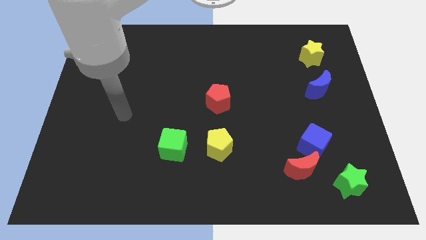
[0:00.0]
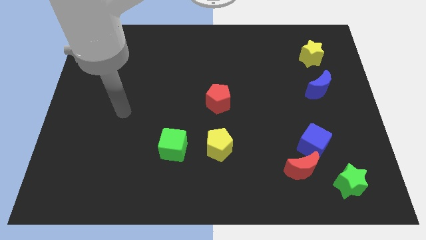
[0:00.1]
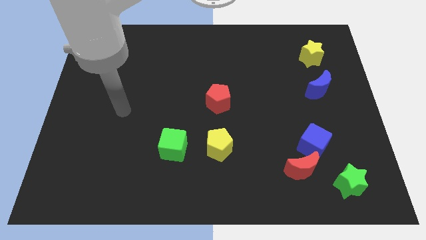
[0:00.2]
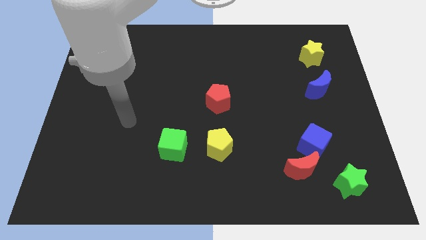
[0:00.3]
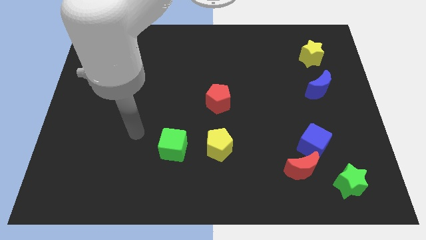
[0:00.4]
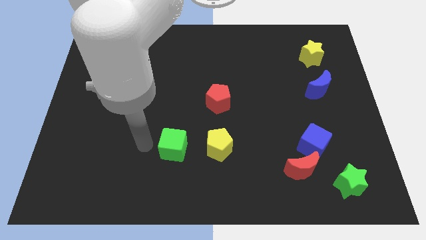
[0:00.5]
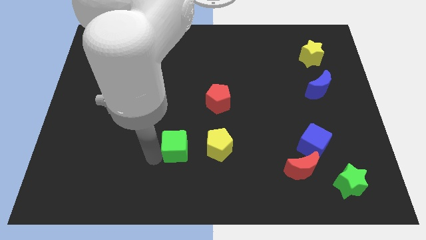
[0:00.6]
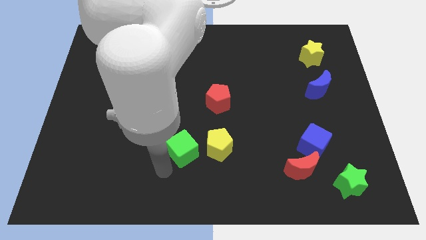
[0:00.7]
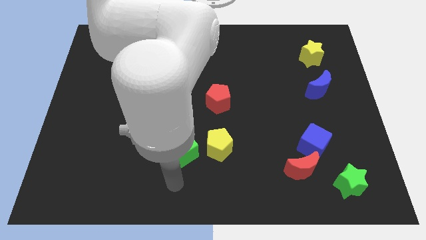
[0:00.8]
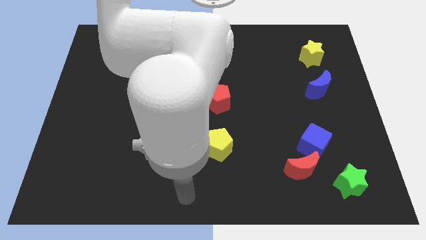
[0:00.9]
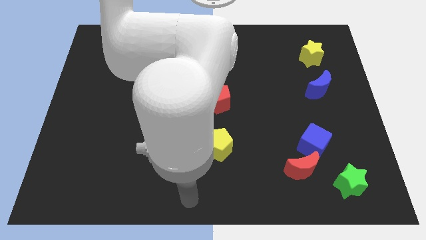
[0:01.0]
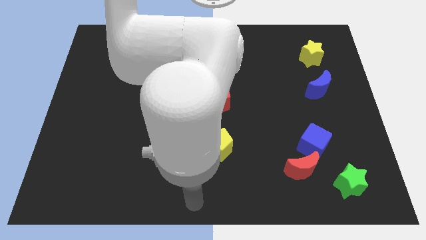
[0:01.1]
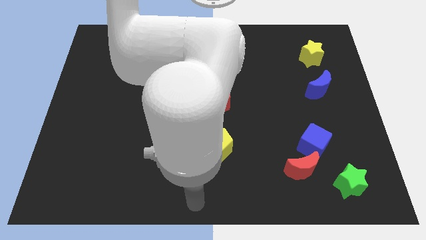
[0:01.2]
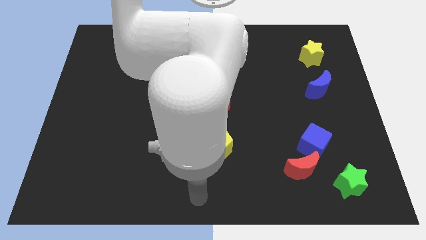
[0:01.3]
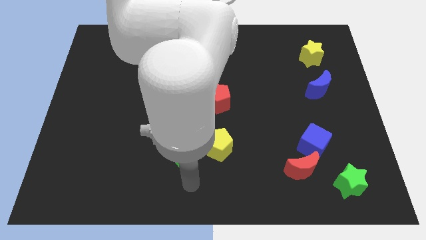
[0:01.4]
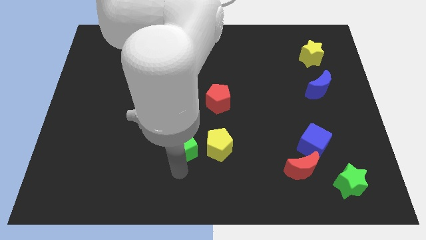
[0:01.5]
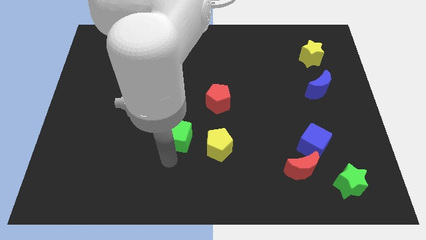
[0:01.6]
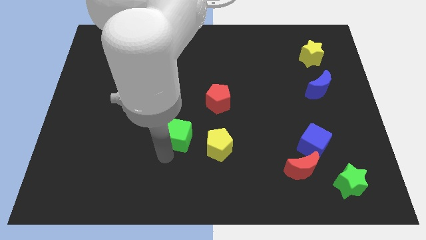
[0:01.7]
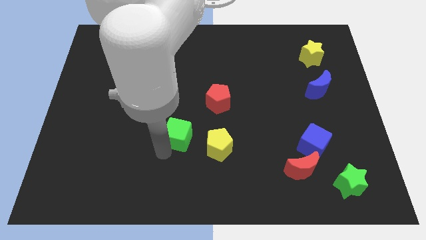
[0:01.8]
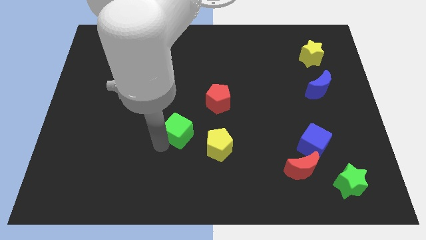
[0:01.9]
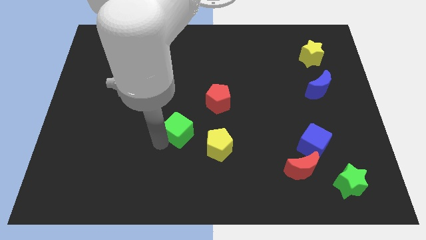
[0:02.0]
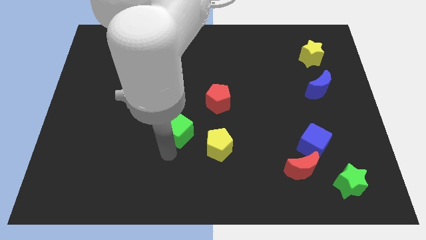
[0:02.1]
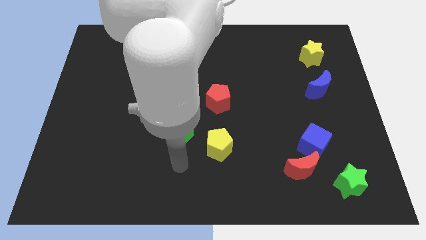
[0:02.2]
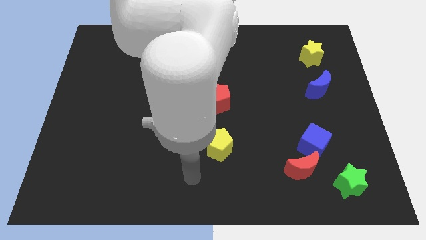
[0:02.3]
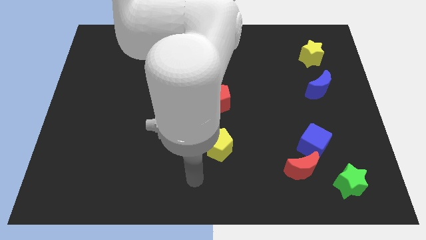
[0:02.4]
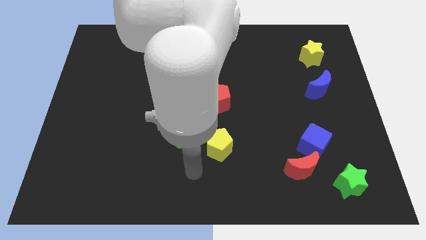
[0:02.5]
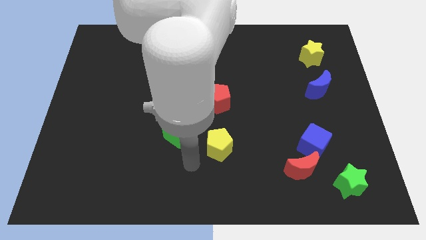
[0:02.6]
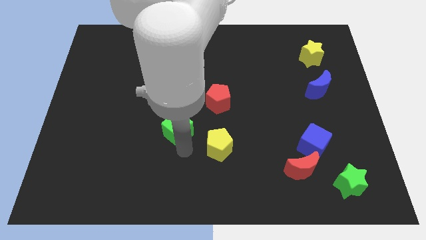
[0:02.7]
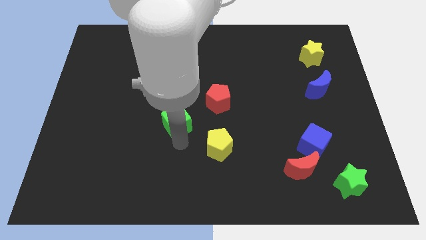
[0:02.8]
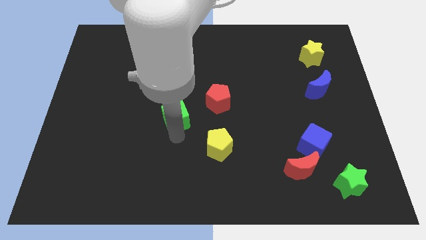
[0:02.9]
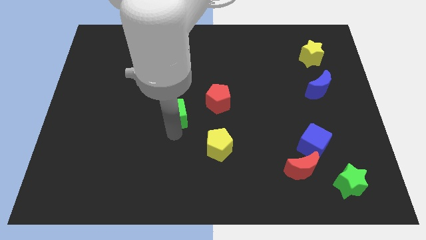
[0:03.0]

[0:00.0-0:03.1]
drag green cube a bit upward

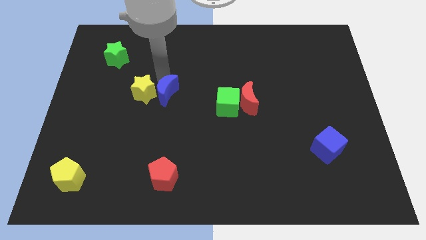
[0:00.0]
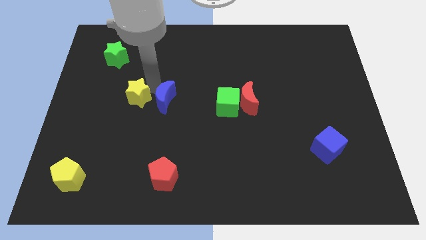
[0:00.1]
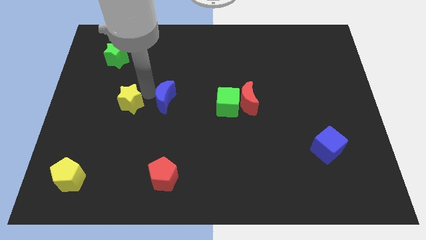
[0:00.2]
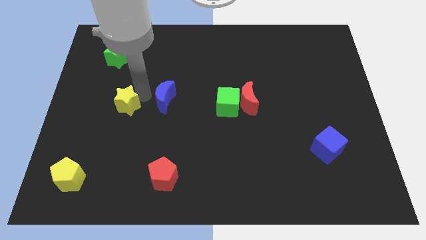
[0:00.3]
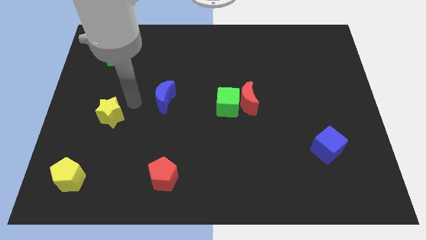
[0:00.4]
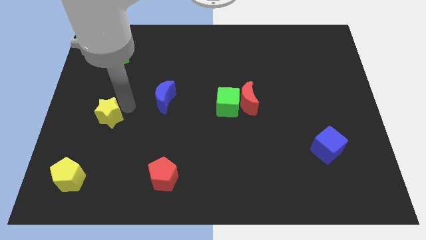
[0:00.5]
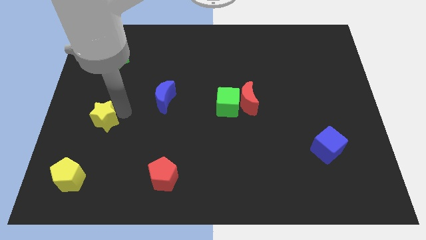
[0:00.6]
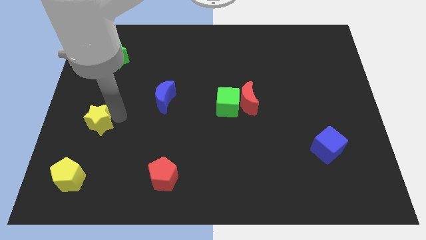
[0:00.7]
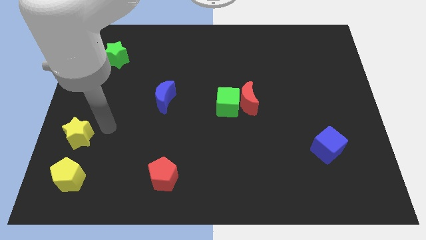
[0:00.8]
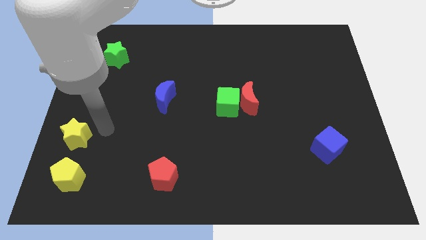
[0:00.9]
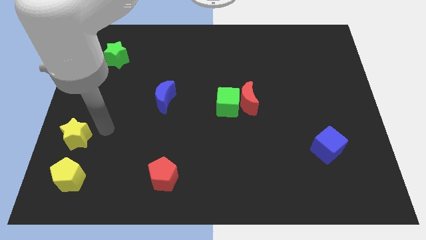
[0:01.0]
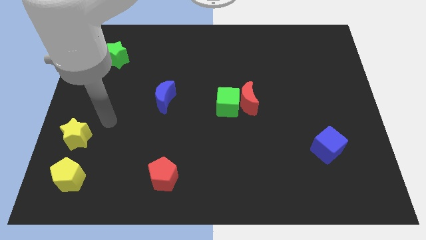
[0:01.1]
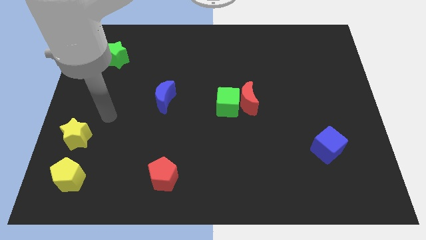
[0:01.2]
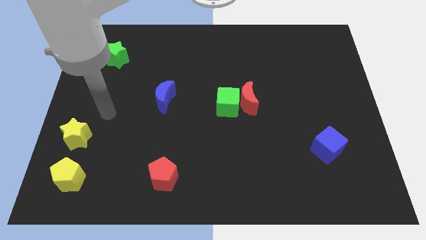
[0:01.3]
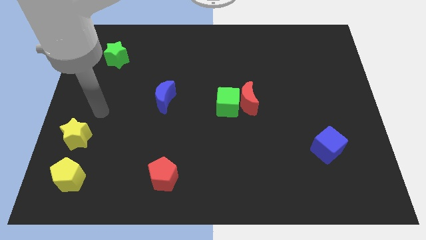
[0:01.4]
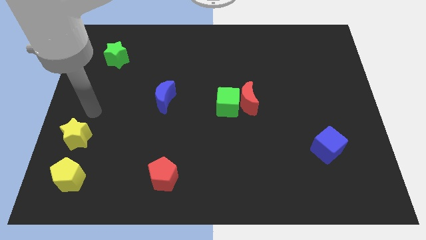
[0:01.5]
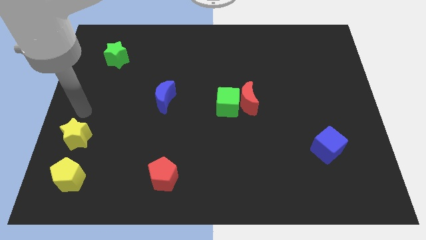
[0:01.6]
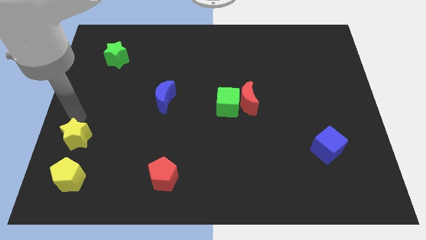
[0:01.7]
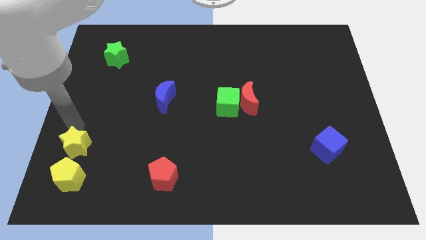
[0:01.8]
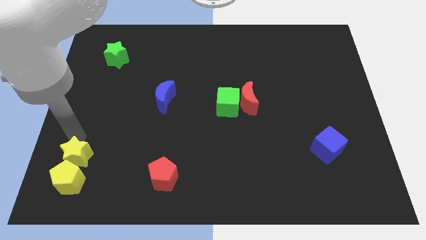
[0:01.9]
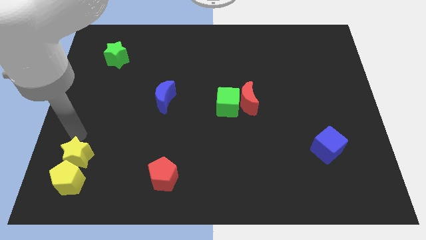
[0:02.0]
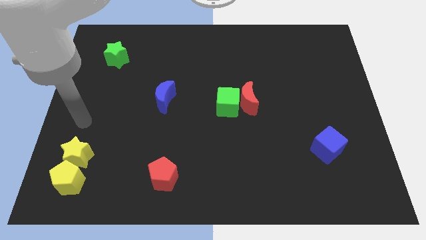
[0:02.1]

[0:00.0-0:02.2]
move the yellow star towards the top of the yellow pentagon

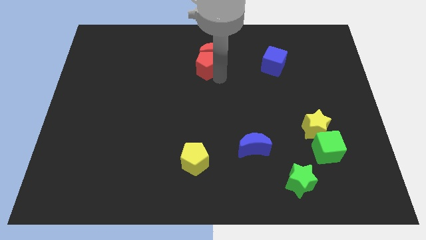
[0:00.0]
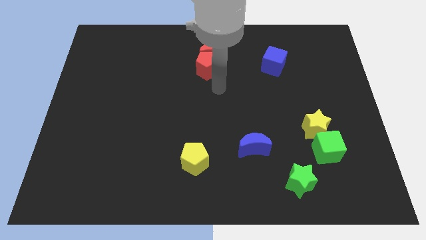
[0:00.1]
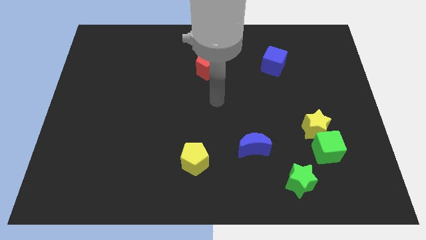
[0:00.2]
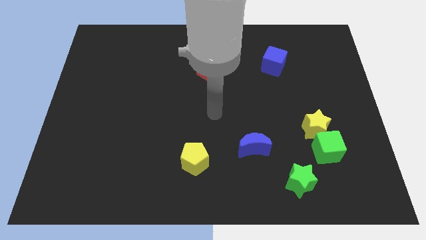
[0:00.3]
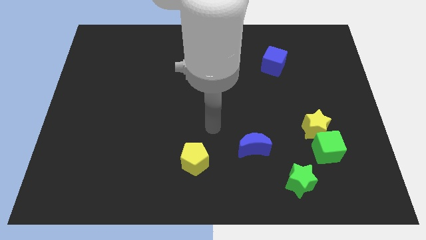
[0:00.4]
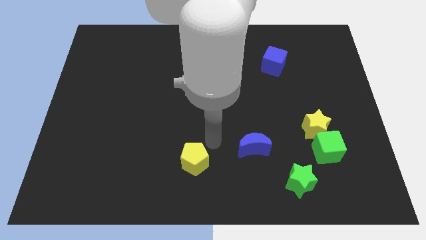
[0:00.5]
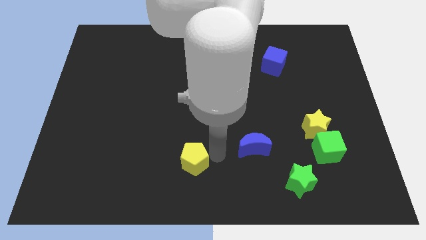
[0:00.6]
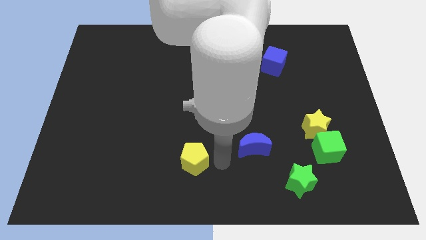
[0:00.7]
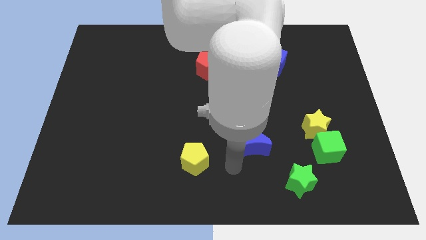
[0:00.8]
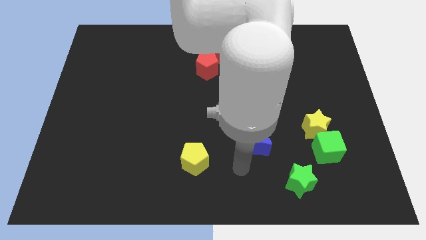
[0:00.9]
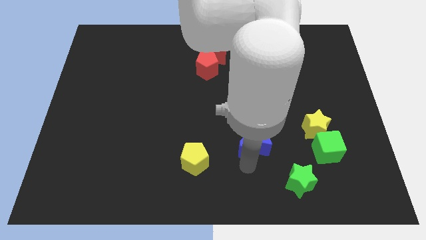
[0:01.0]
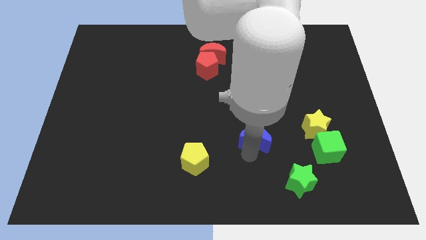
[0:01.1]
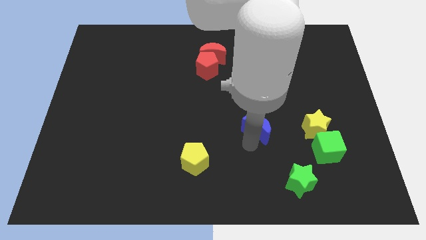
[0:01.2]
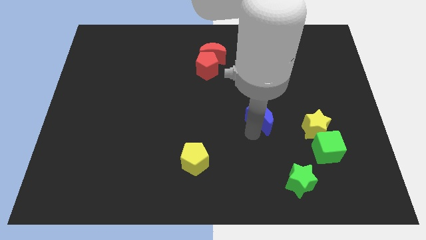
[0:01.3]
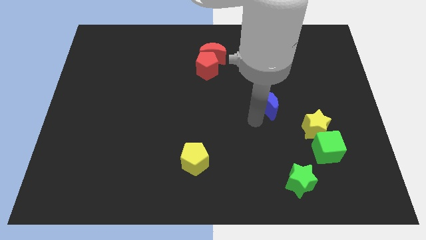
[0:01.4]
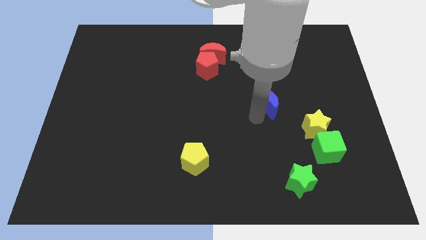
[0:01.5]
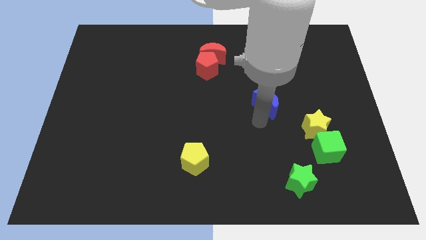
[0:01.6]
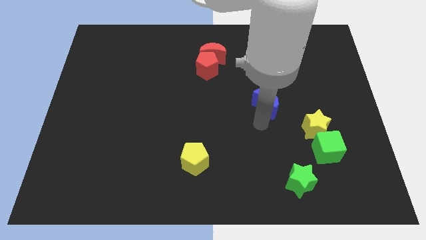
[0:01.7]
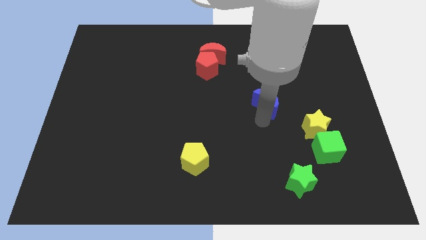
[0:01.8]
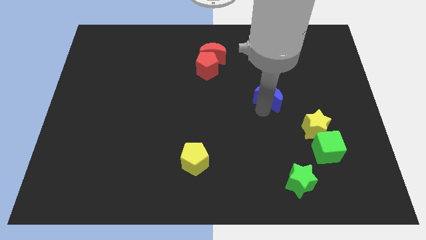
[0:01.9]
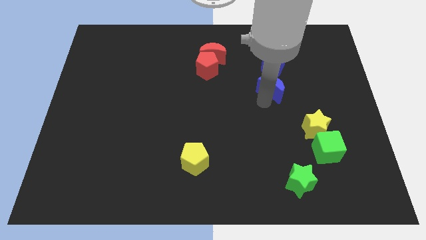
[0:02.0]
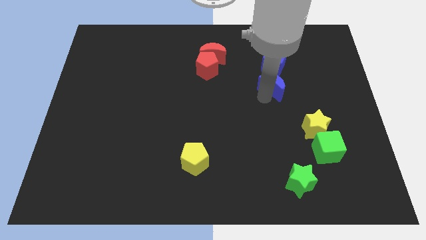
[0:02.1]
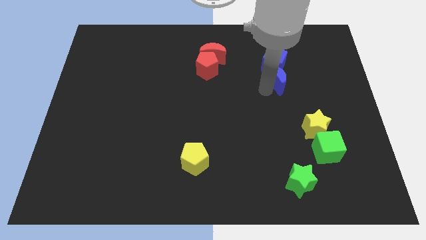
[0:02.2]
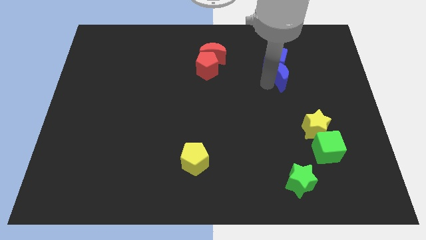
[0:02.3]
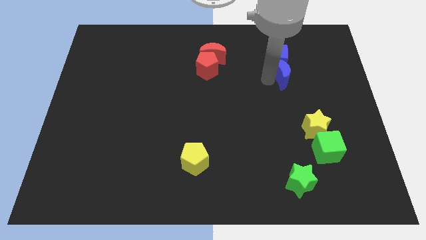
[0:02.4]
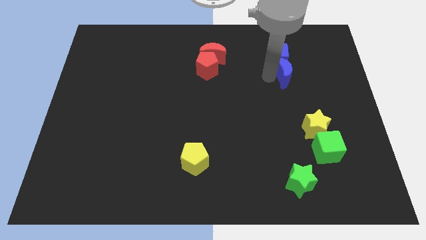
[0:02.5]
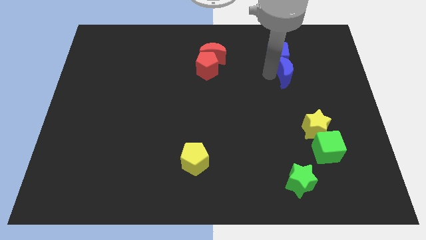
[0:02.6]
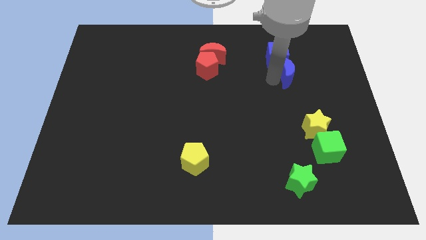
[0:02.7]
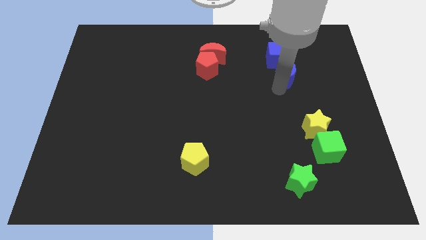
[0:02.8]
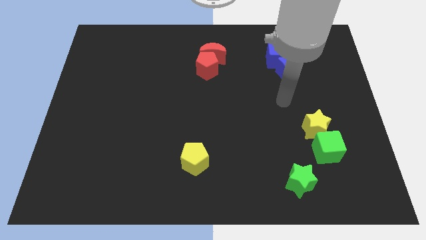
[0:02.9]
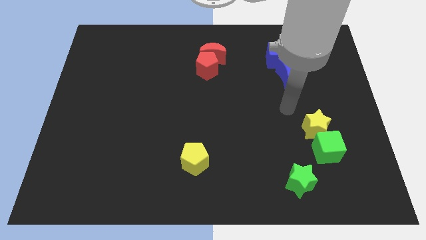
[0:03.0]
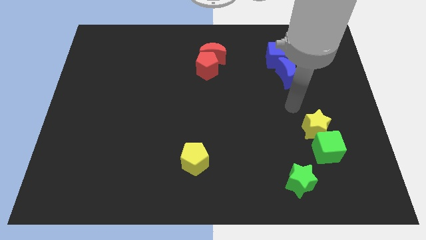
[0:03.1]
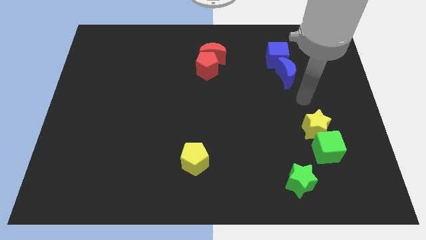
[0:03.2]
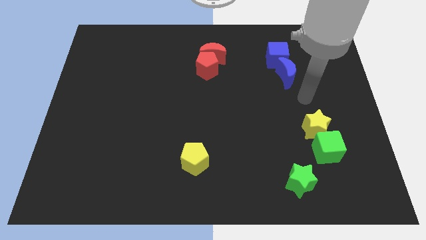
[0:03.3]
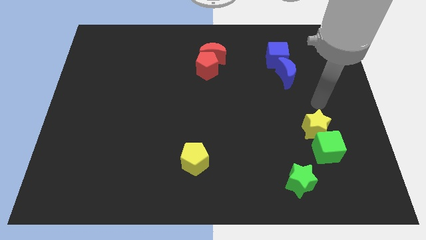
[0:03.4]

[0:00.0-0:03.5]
push the blue moon towards the blue cube

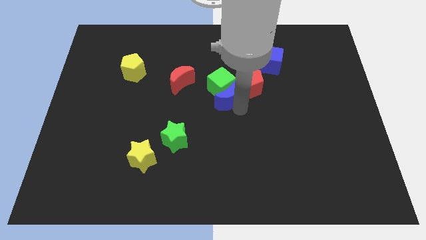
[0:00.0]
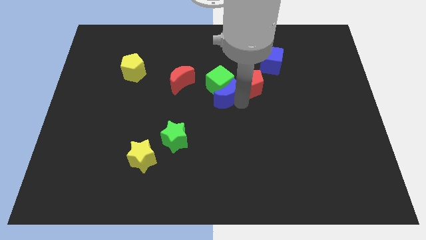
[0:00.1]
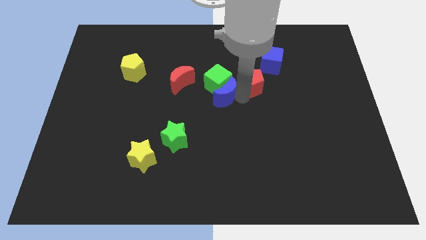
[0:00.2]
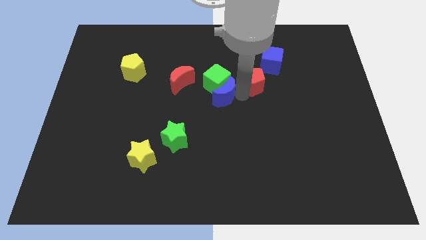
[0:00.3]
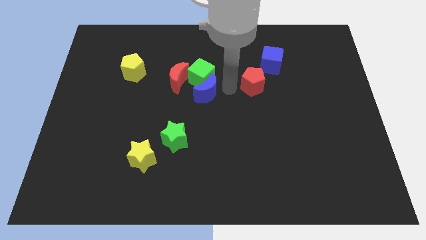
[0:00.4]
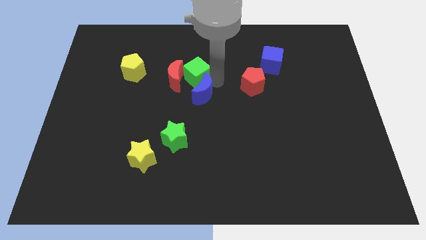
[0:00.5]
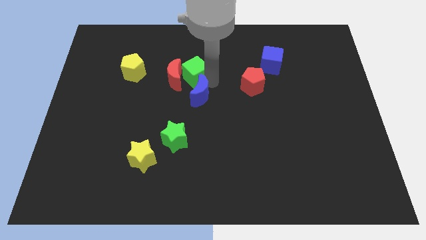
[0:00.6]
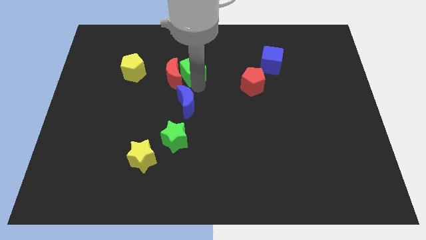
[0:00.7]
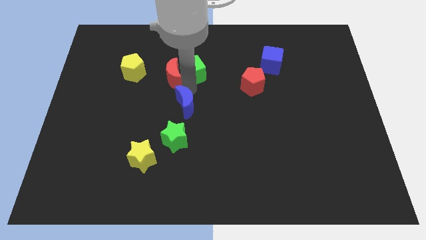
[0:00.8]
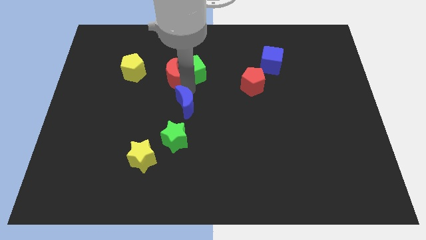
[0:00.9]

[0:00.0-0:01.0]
separate the blue moon and red pentagon
